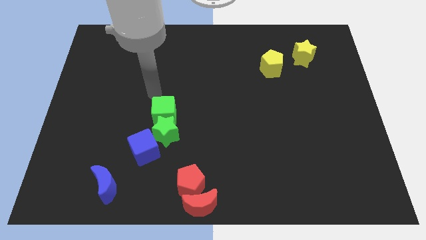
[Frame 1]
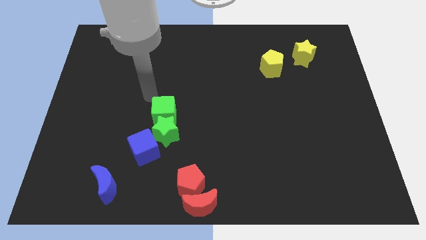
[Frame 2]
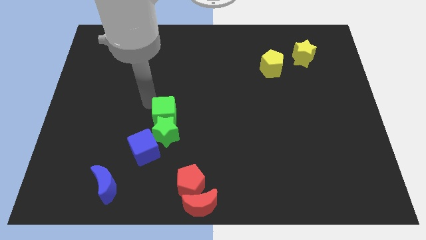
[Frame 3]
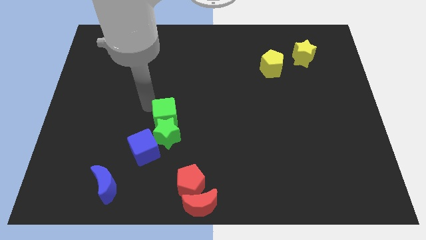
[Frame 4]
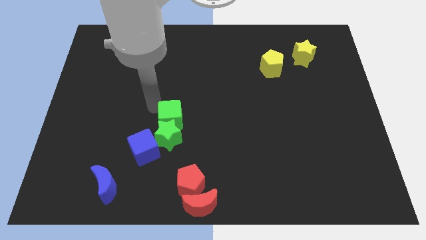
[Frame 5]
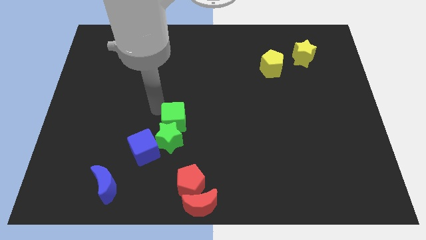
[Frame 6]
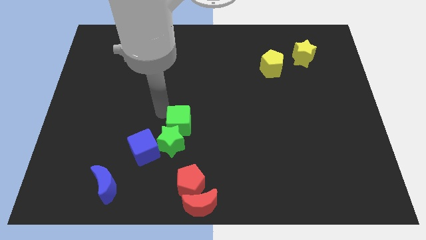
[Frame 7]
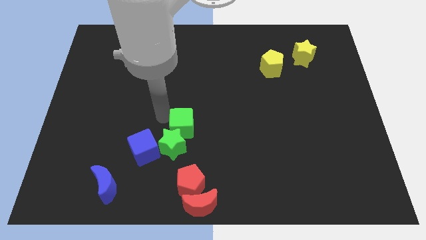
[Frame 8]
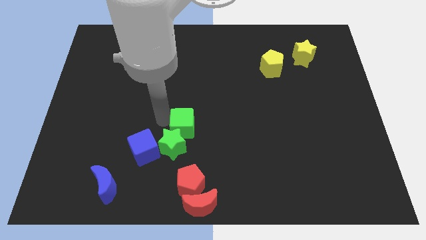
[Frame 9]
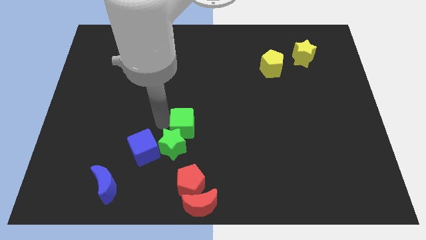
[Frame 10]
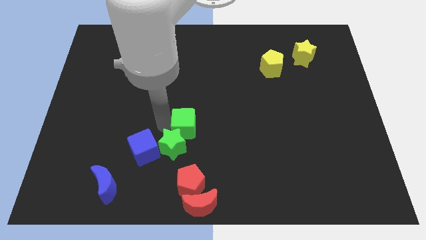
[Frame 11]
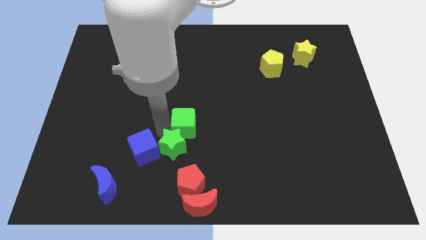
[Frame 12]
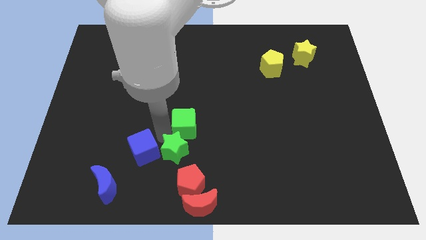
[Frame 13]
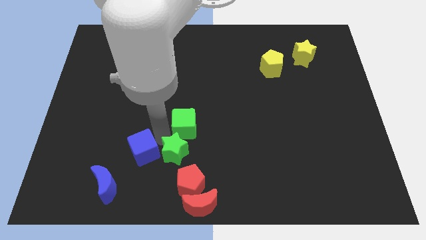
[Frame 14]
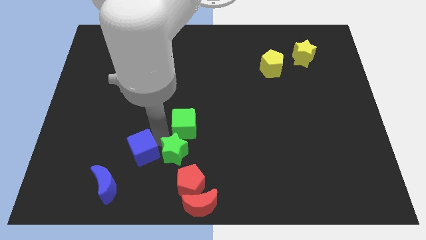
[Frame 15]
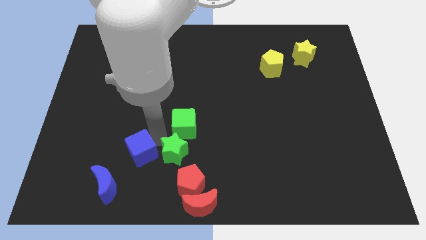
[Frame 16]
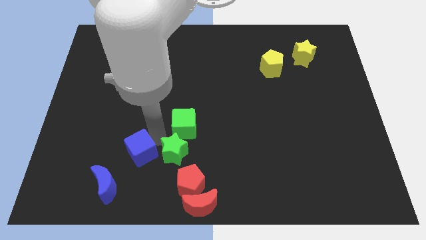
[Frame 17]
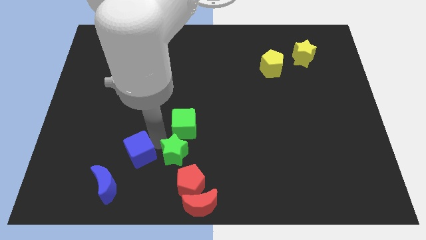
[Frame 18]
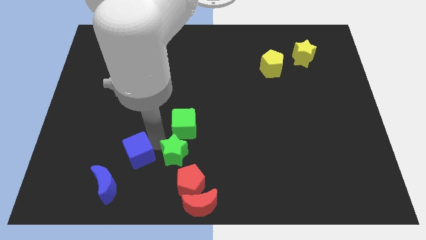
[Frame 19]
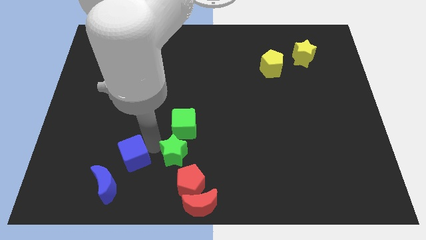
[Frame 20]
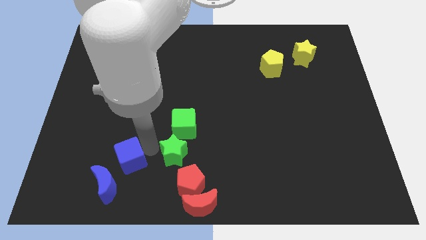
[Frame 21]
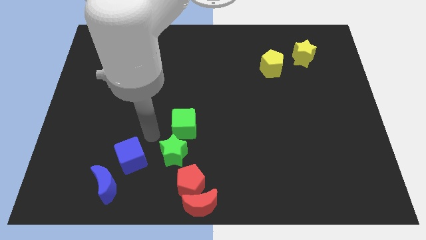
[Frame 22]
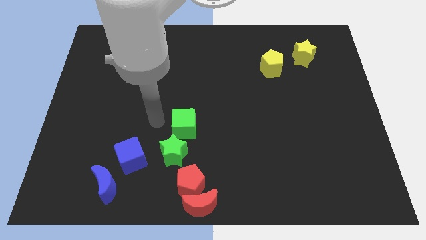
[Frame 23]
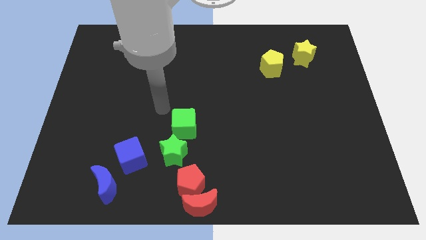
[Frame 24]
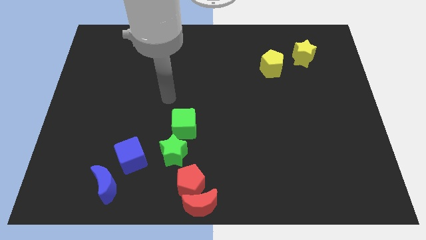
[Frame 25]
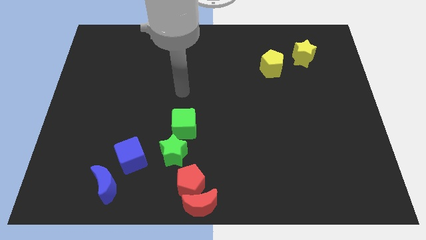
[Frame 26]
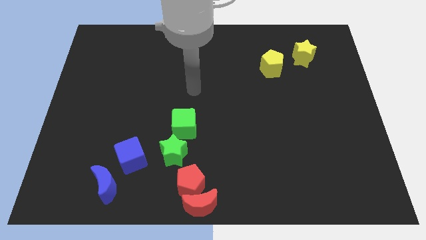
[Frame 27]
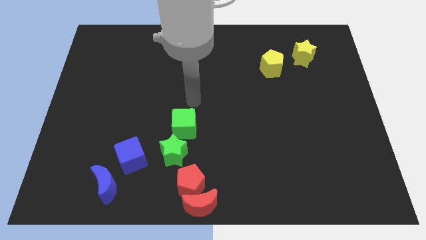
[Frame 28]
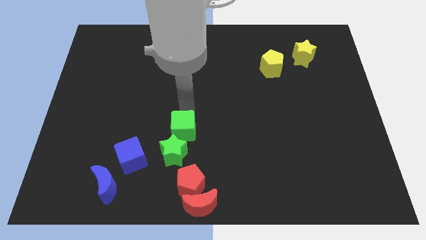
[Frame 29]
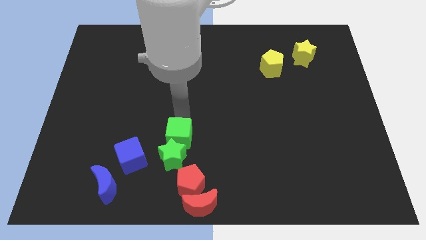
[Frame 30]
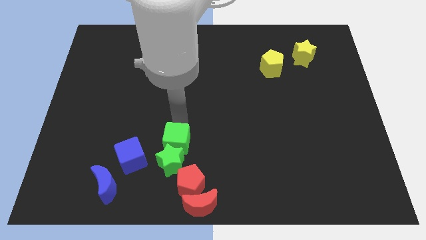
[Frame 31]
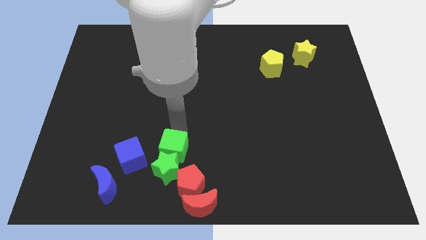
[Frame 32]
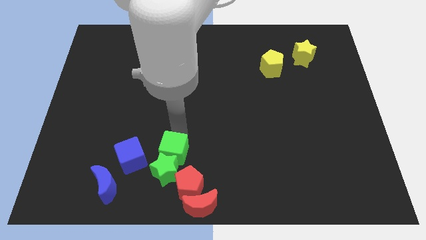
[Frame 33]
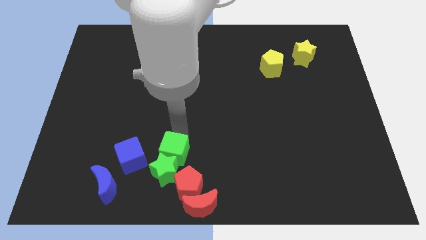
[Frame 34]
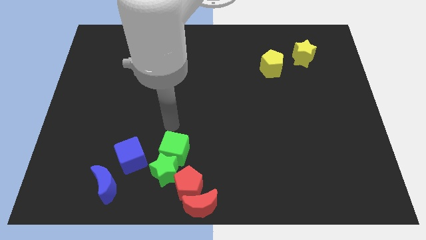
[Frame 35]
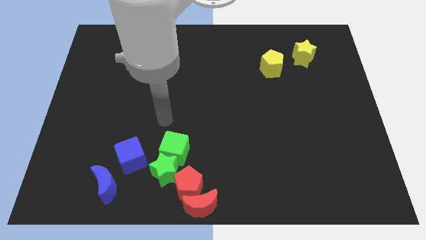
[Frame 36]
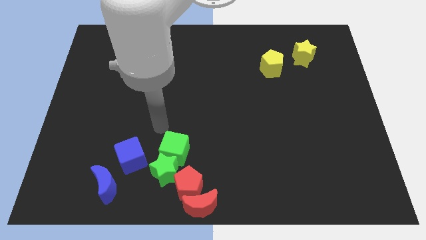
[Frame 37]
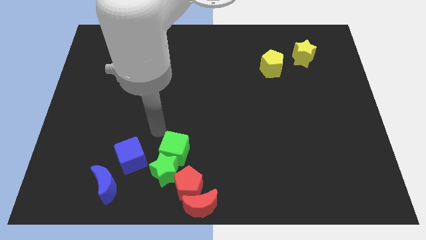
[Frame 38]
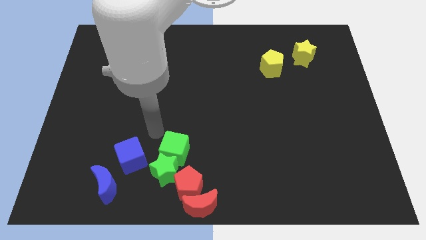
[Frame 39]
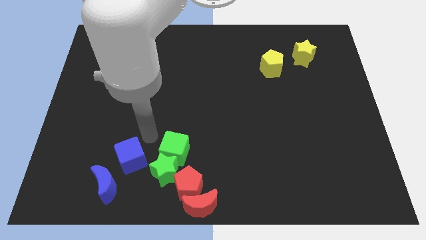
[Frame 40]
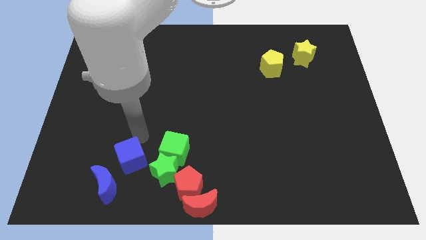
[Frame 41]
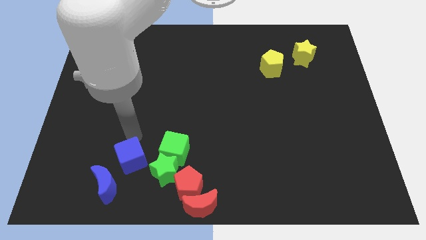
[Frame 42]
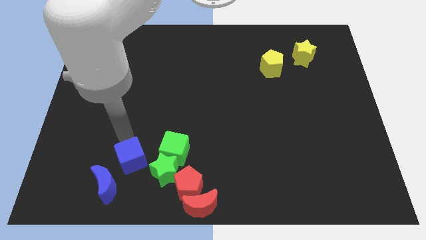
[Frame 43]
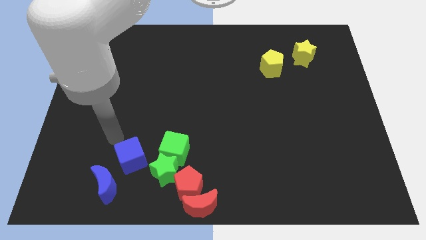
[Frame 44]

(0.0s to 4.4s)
move green star and green cube towards the red pentagon

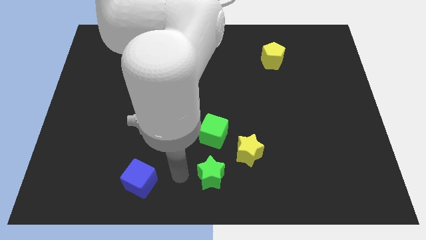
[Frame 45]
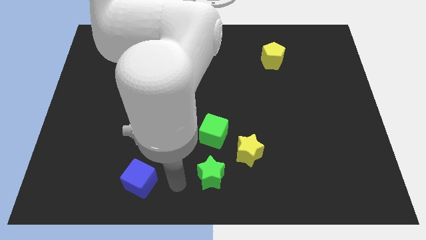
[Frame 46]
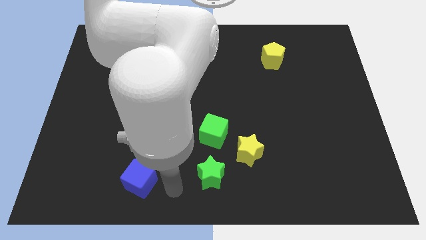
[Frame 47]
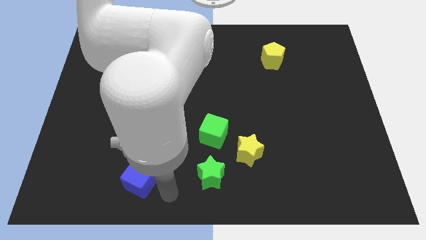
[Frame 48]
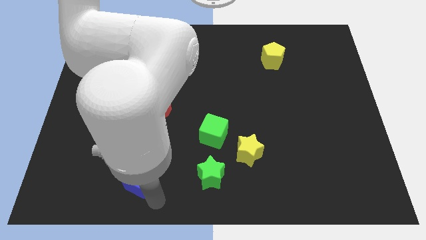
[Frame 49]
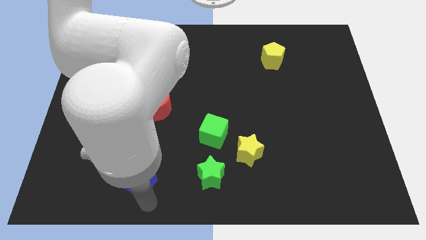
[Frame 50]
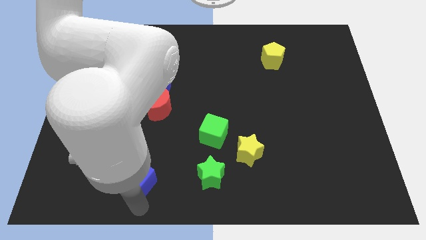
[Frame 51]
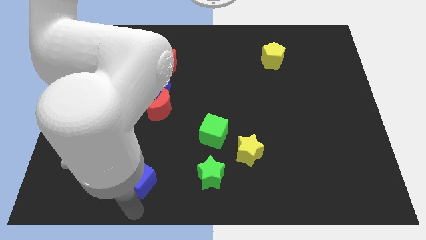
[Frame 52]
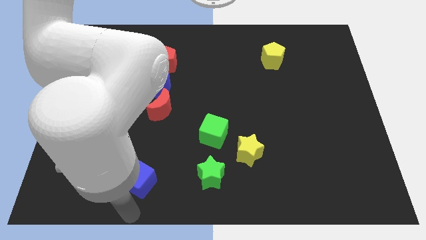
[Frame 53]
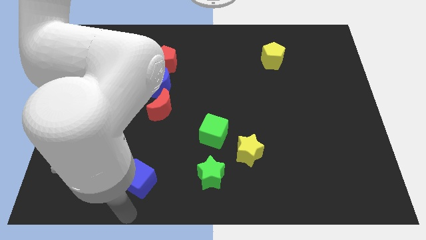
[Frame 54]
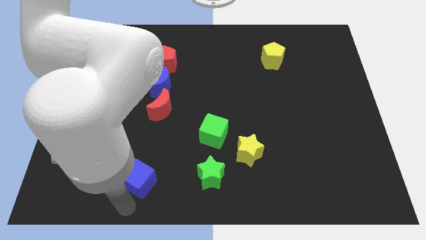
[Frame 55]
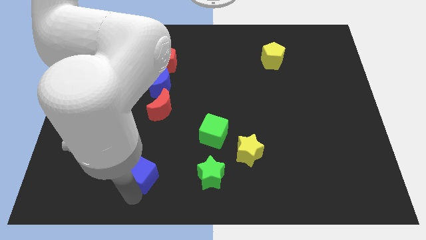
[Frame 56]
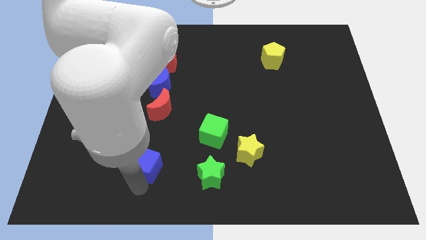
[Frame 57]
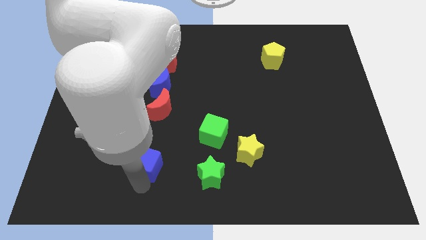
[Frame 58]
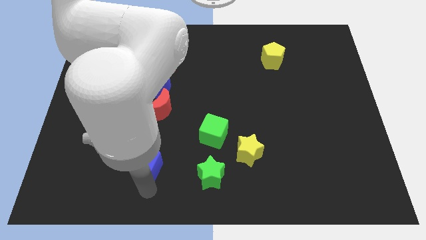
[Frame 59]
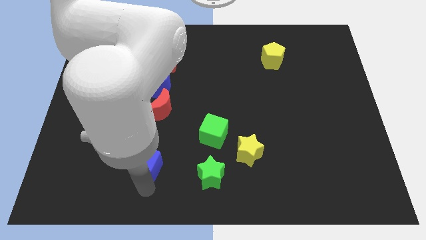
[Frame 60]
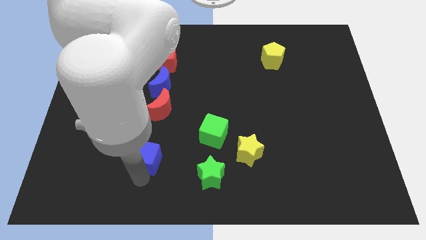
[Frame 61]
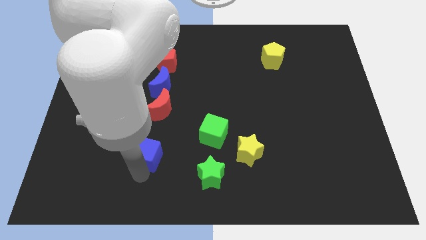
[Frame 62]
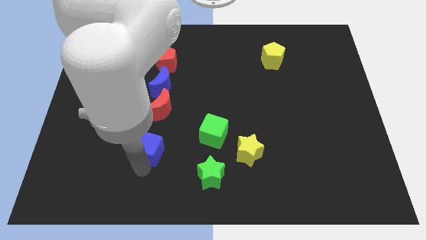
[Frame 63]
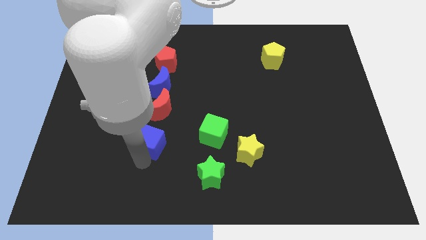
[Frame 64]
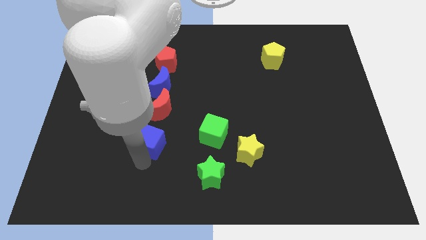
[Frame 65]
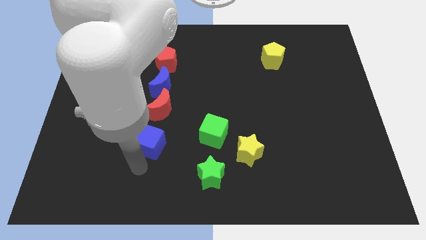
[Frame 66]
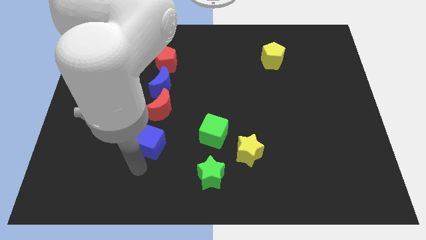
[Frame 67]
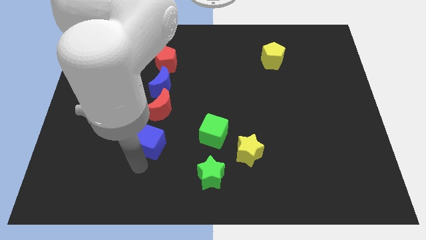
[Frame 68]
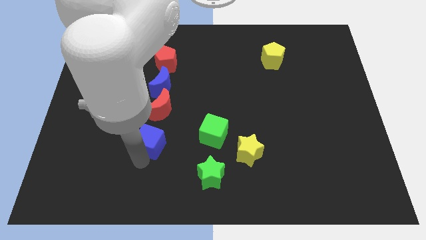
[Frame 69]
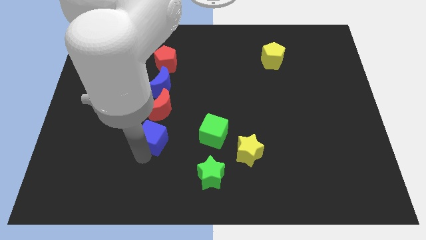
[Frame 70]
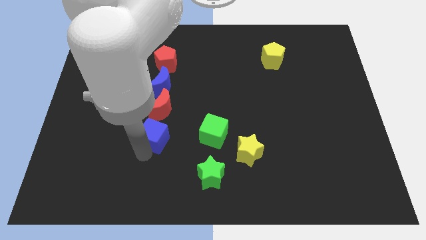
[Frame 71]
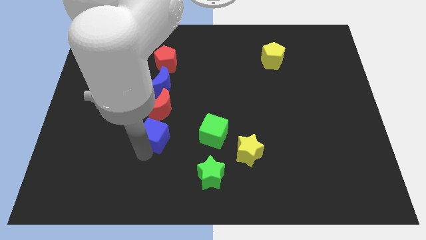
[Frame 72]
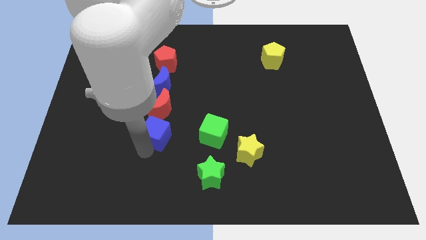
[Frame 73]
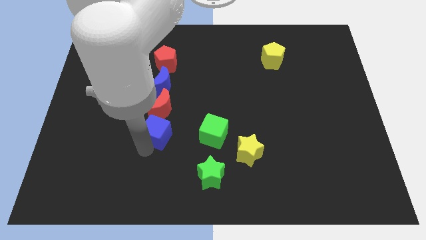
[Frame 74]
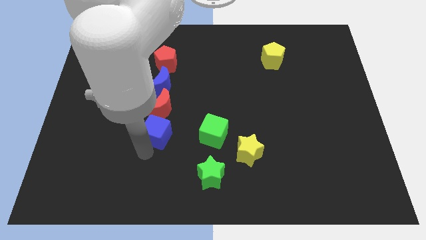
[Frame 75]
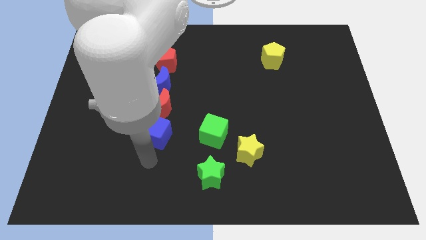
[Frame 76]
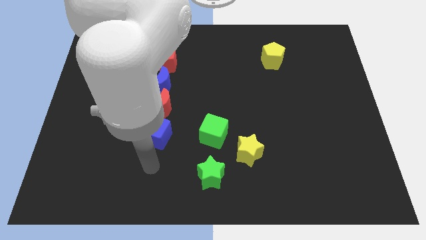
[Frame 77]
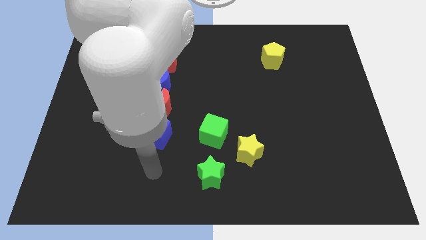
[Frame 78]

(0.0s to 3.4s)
place the blue cube to the bottom of red crescent

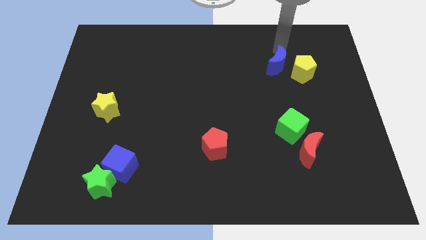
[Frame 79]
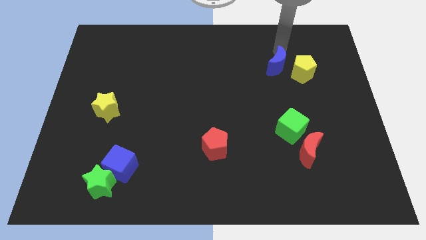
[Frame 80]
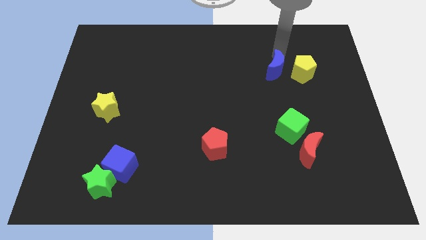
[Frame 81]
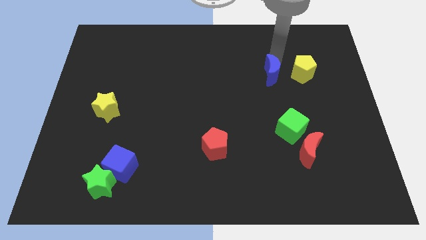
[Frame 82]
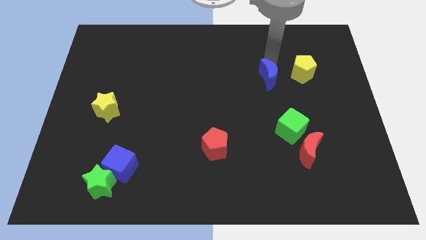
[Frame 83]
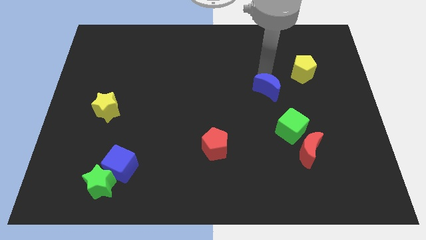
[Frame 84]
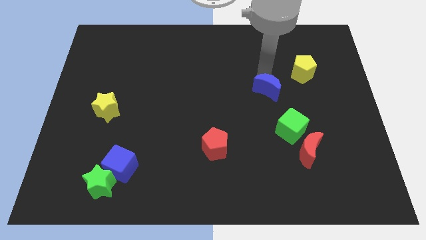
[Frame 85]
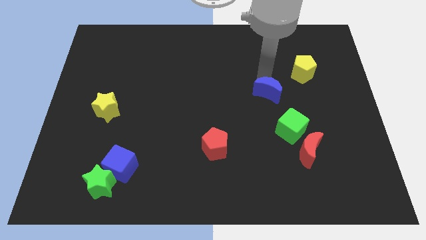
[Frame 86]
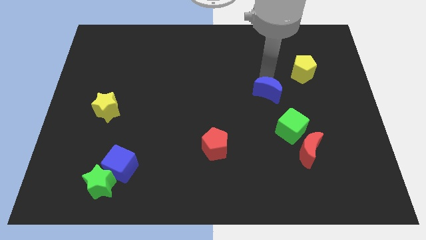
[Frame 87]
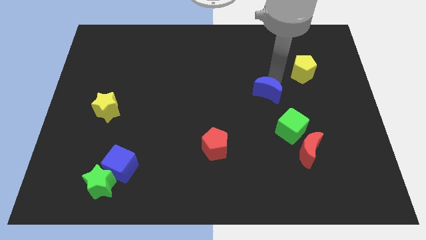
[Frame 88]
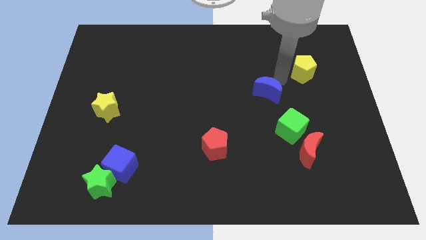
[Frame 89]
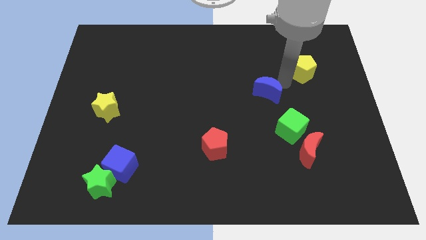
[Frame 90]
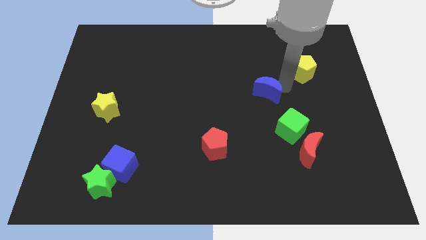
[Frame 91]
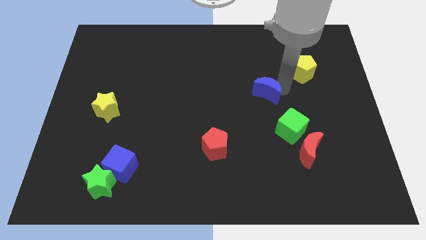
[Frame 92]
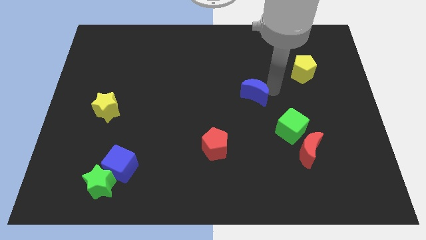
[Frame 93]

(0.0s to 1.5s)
move the blue crescent diagonally on the bottom left side of the yellow pentagon
